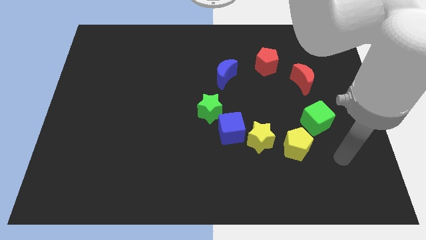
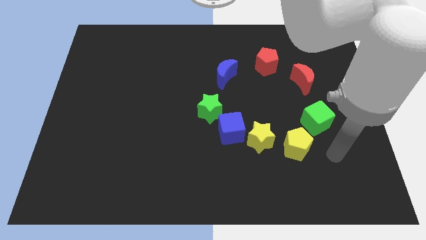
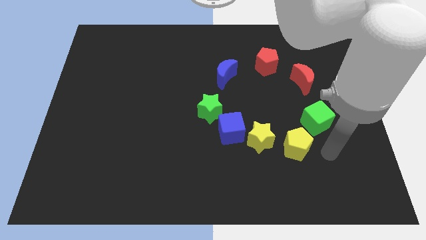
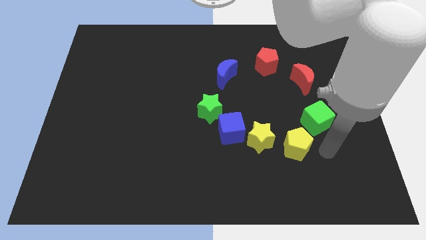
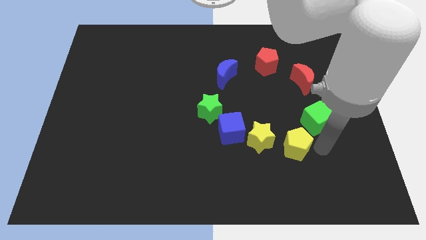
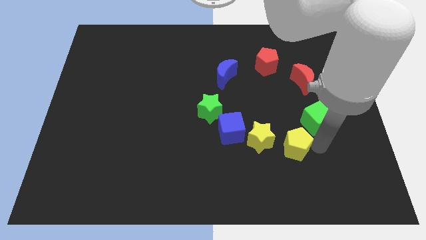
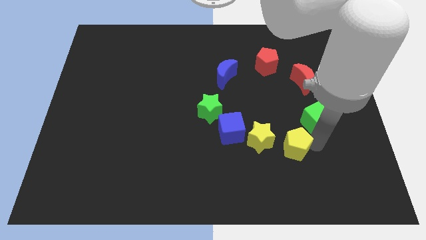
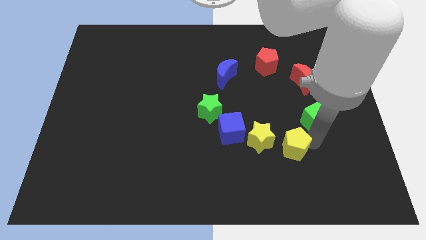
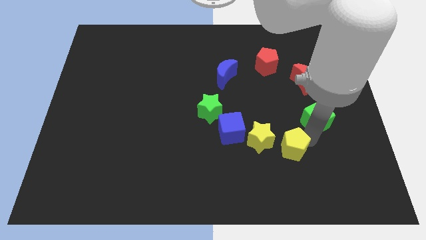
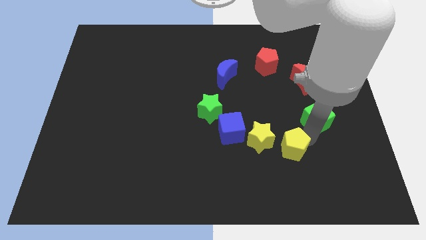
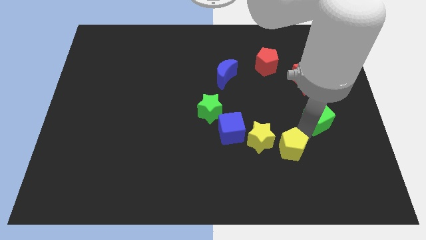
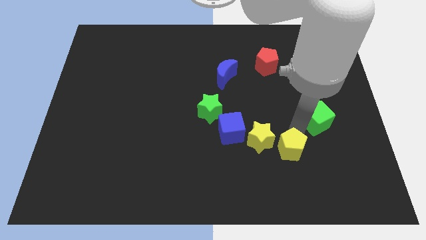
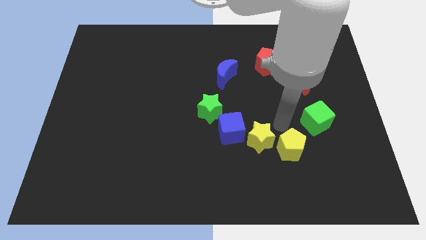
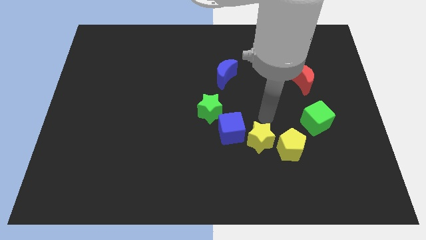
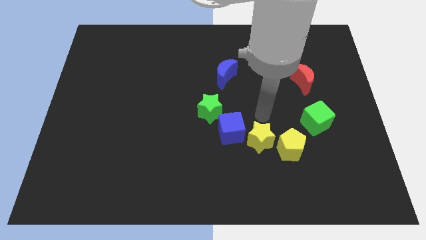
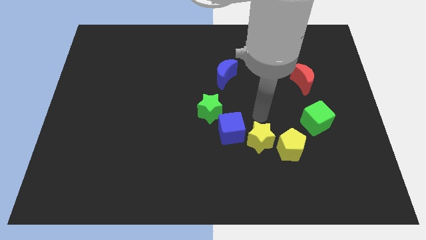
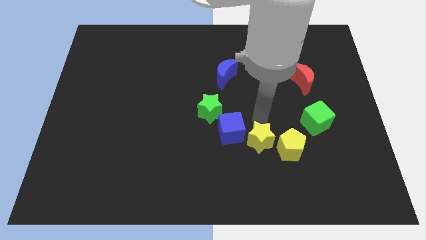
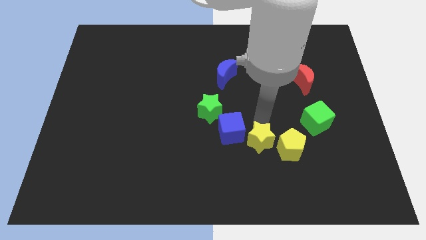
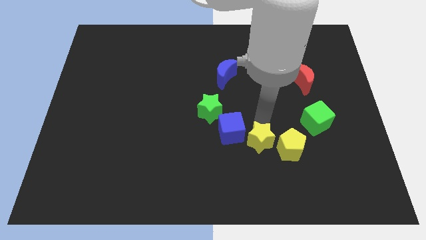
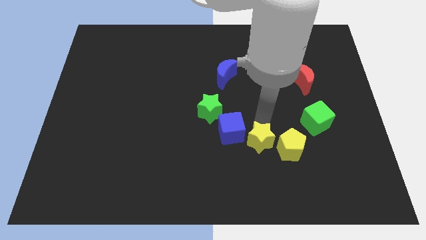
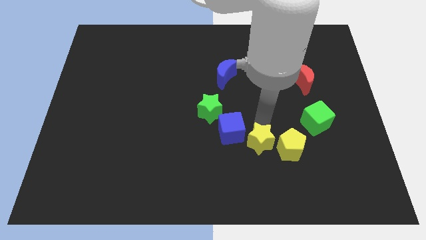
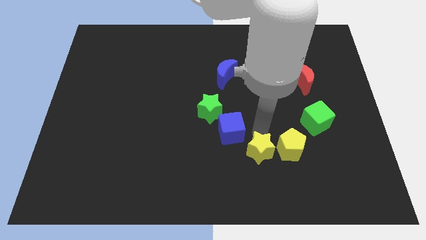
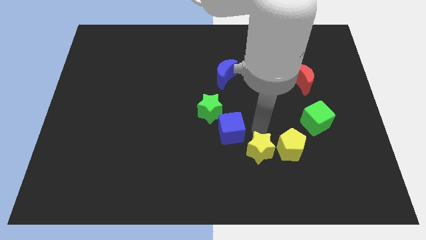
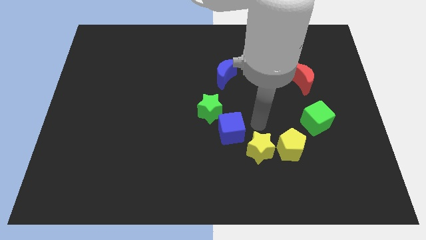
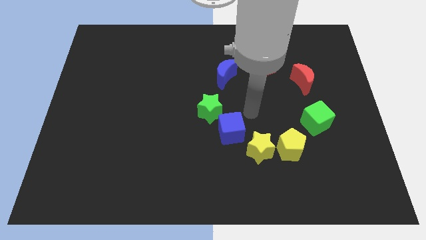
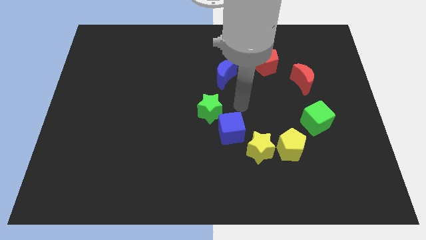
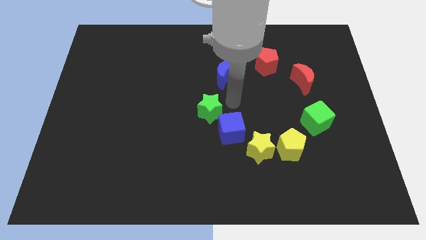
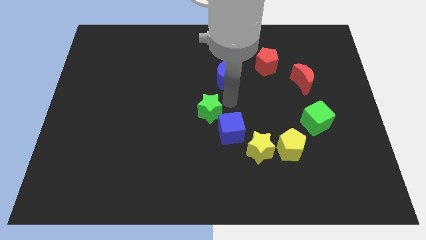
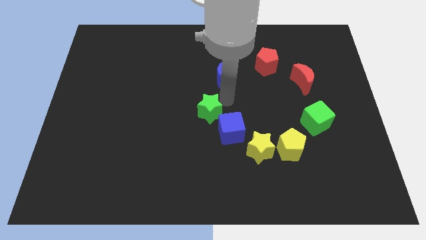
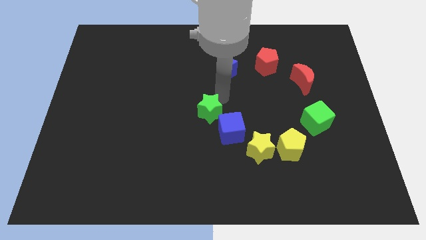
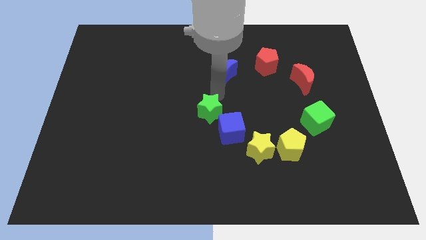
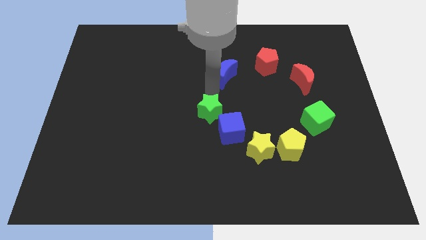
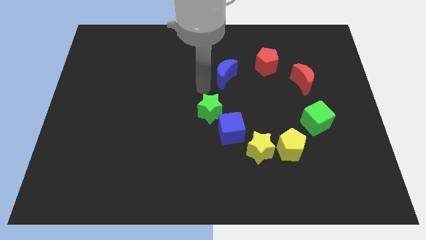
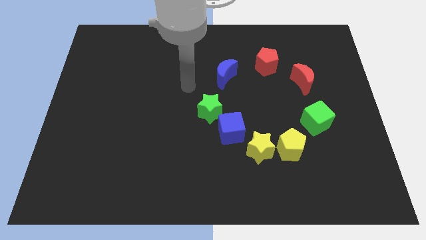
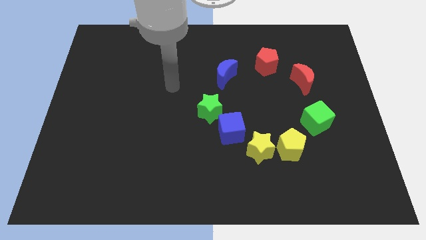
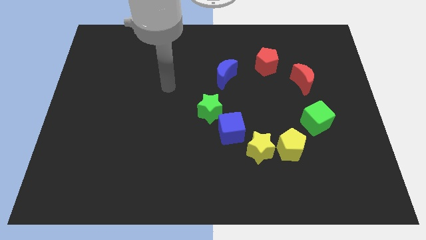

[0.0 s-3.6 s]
place the yellow star to the left of the yellow pentagon

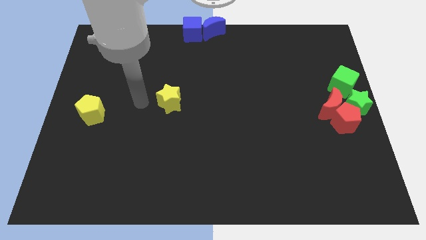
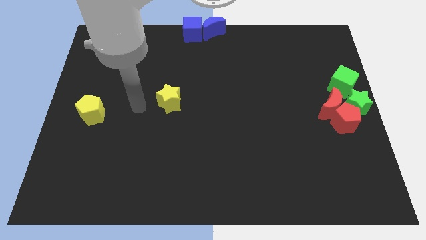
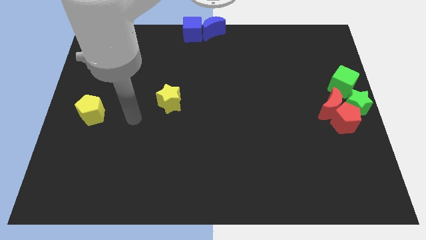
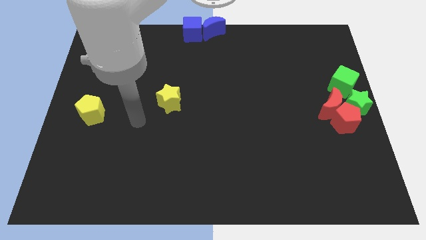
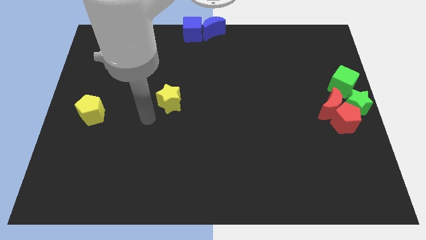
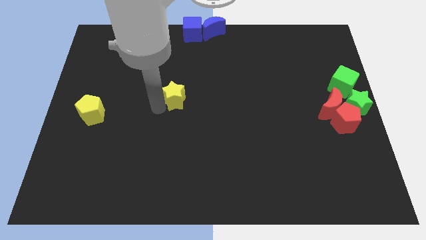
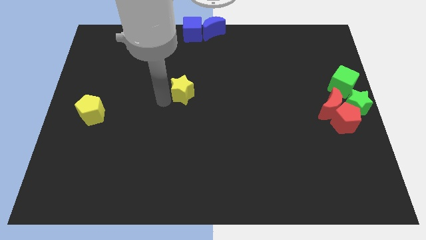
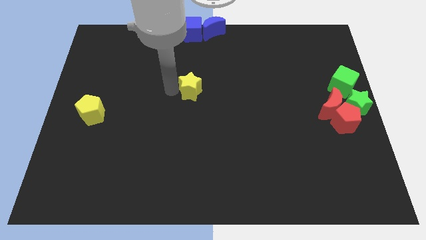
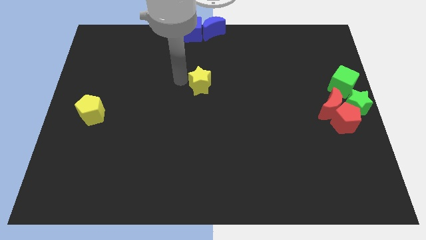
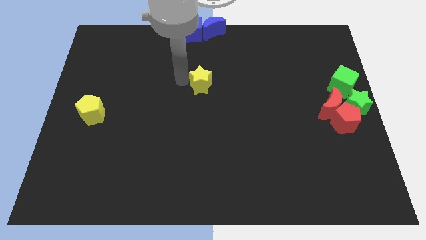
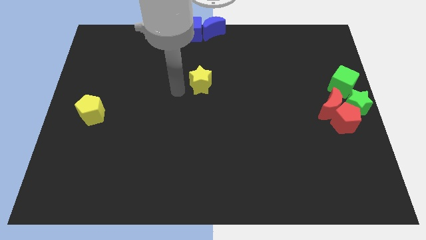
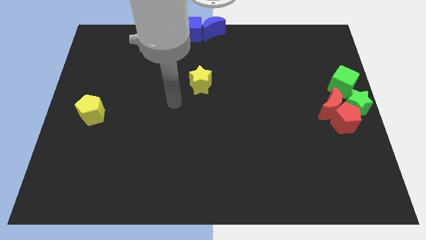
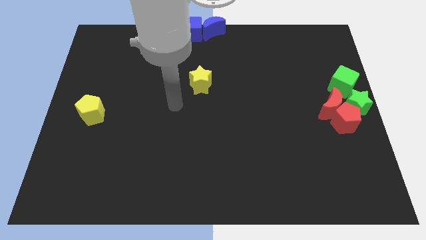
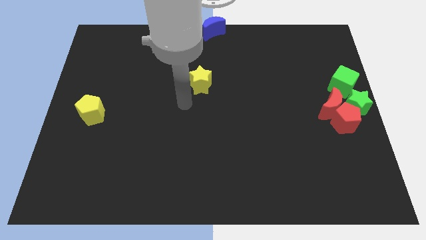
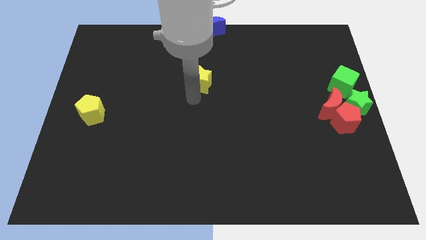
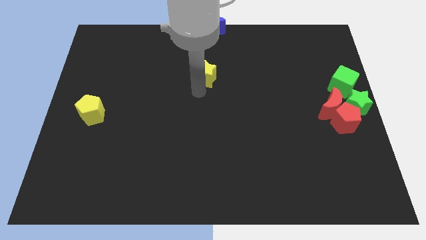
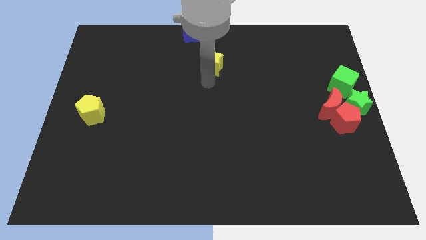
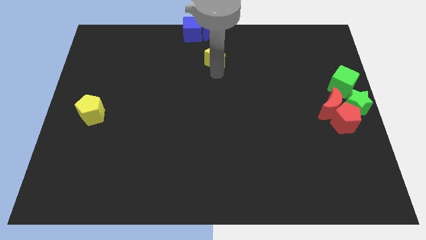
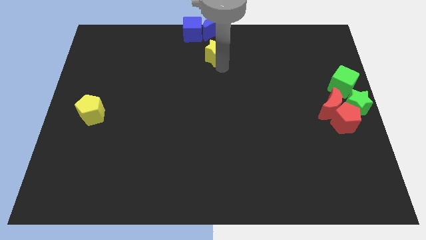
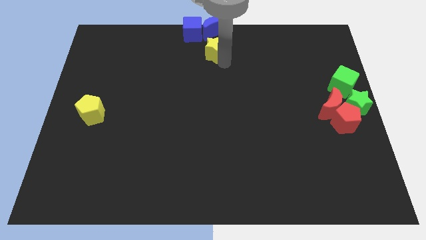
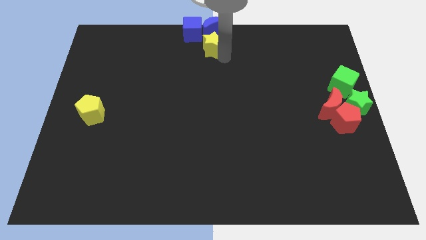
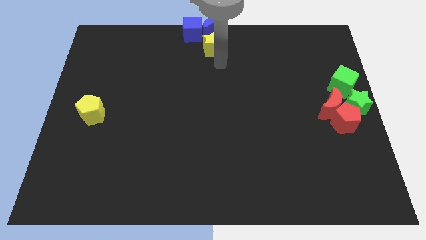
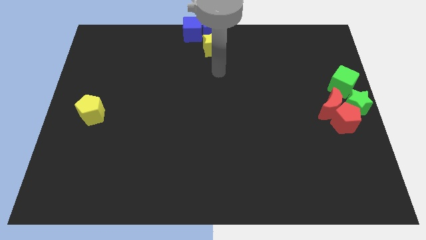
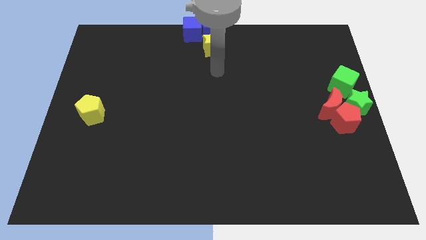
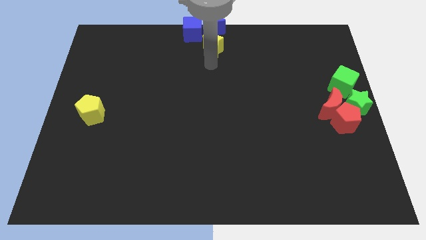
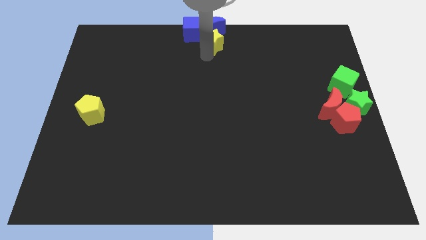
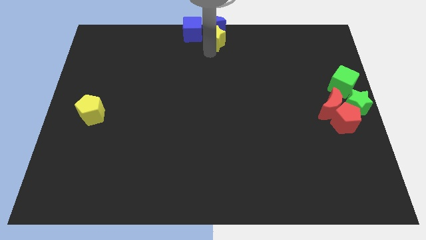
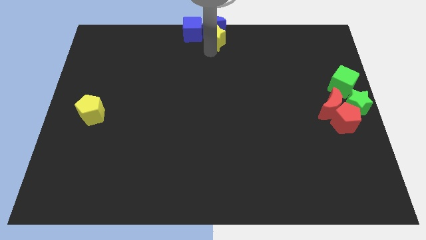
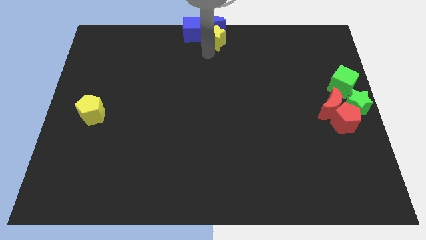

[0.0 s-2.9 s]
place a yellow star below the blue moon

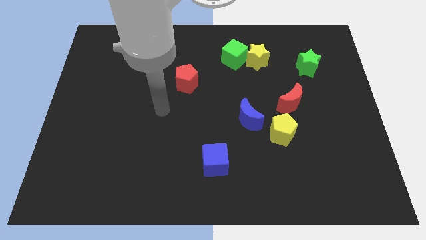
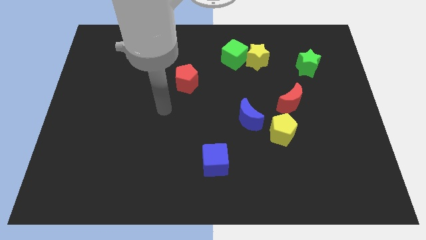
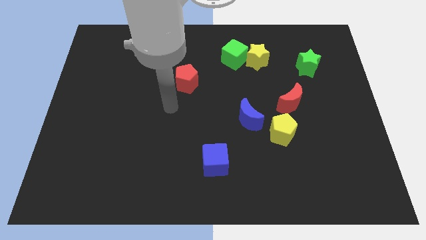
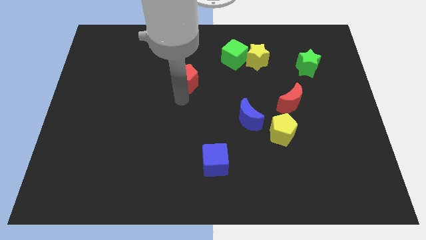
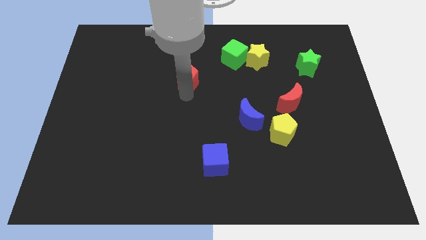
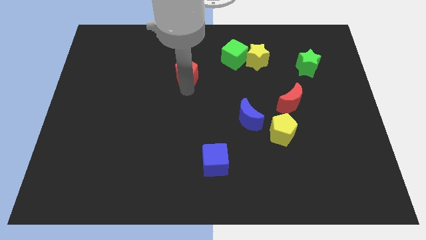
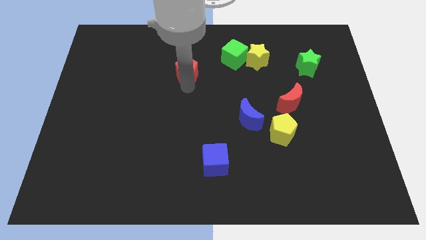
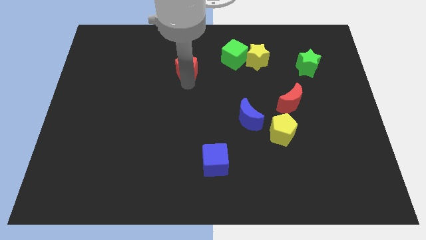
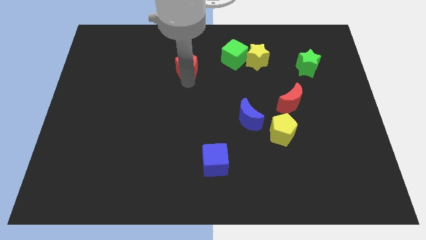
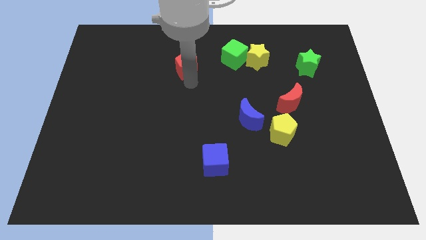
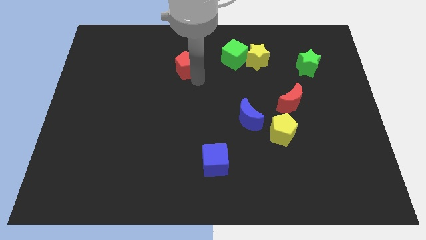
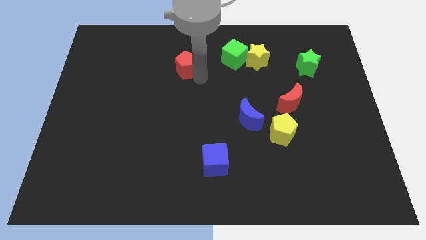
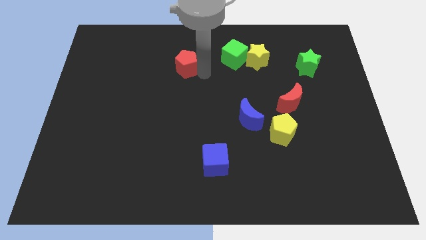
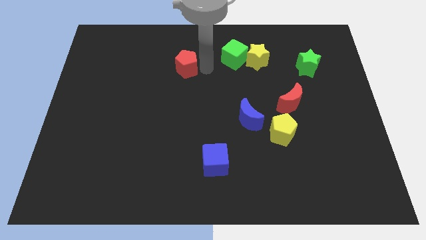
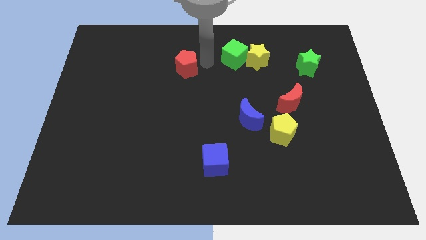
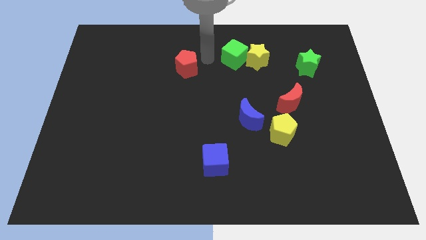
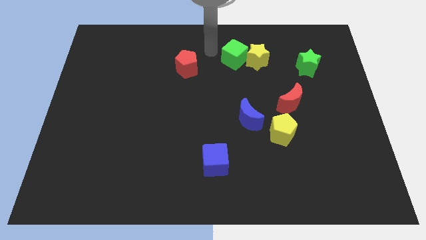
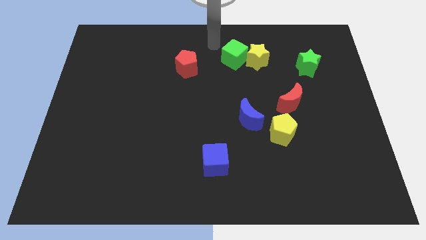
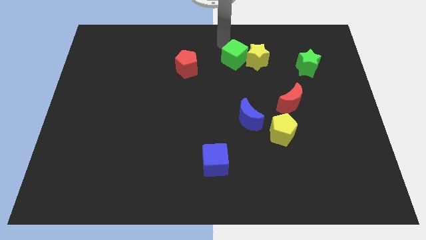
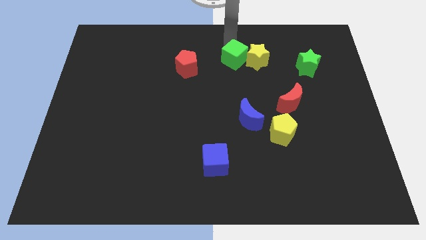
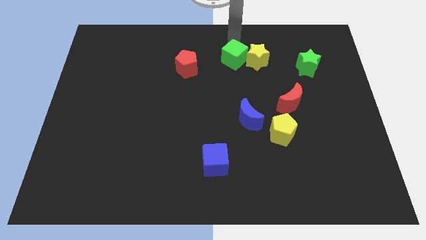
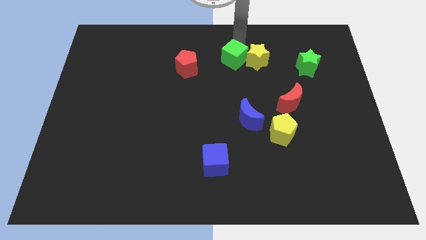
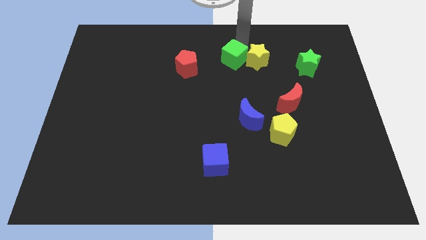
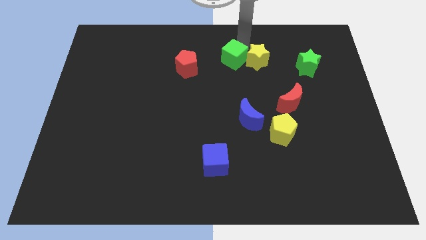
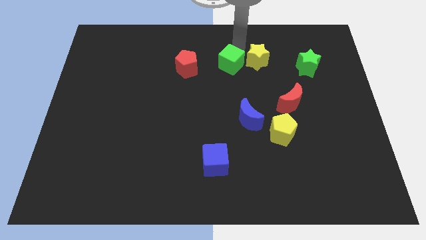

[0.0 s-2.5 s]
place the green cube to the right of the red pentagon
